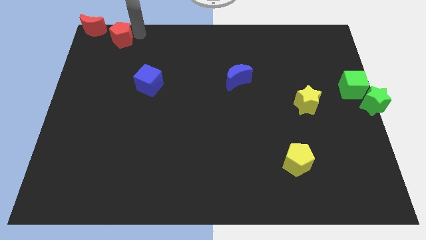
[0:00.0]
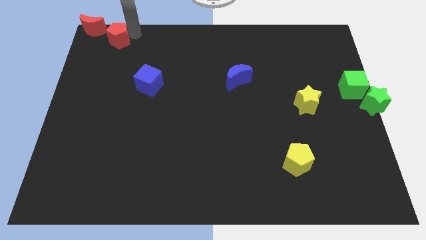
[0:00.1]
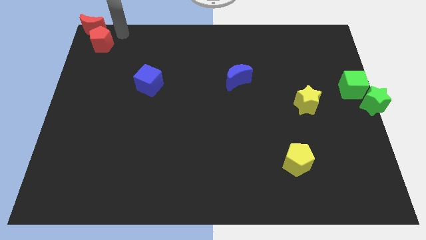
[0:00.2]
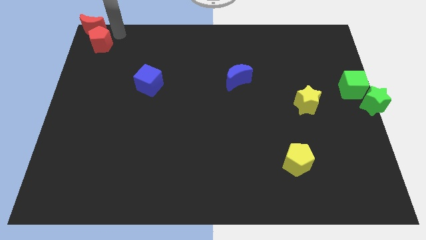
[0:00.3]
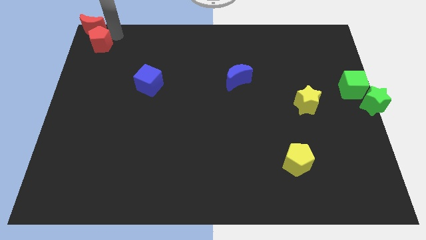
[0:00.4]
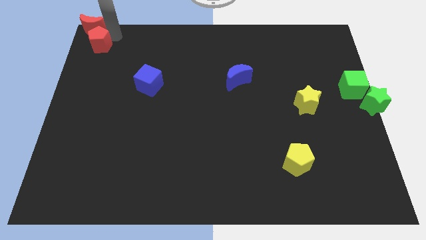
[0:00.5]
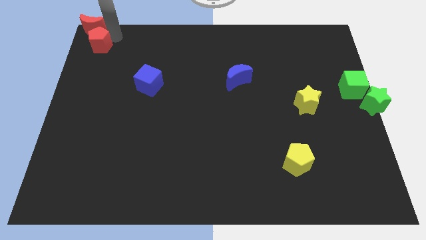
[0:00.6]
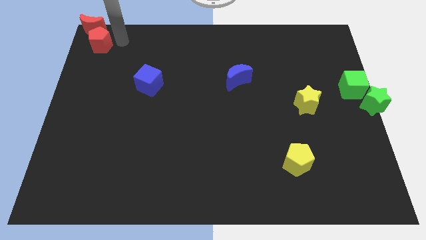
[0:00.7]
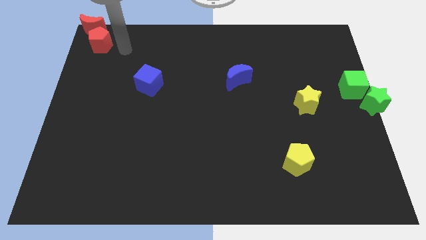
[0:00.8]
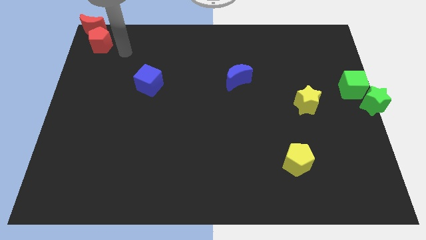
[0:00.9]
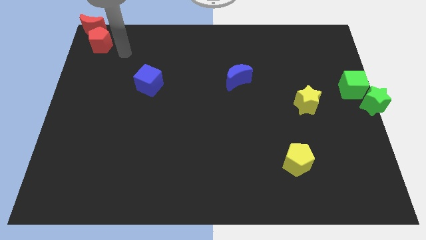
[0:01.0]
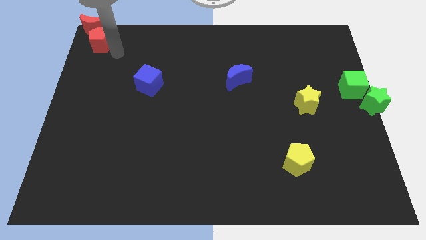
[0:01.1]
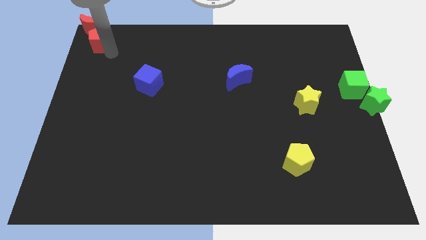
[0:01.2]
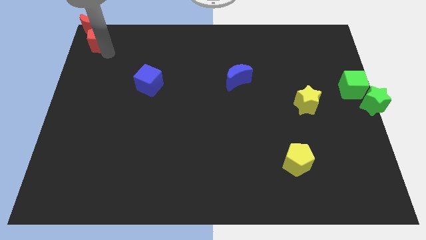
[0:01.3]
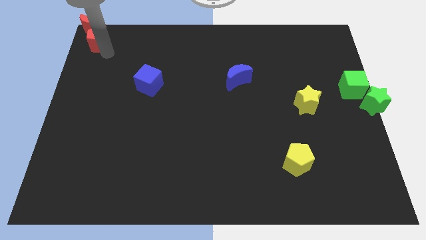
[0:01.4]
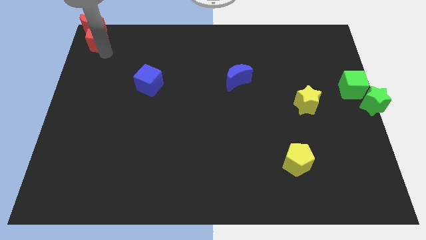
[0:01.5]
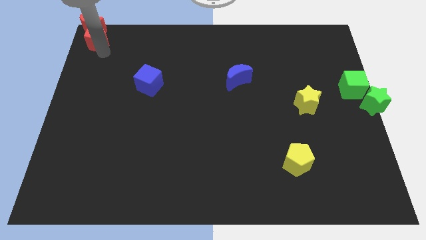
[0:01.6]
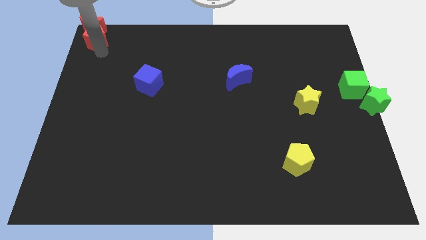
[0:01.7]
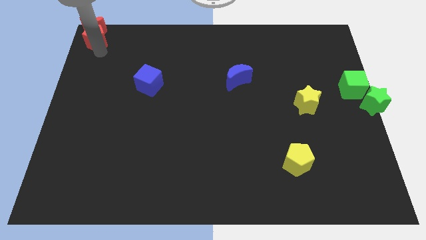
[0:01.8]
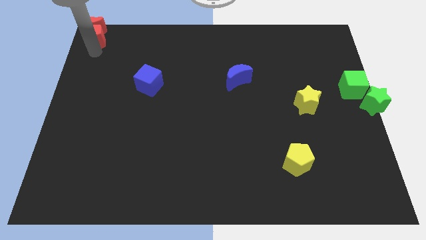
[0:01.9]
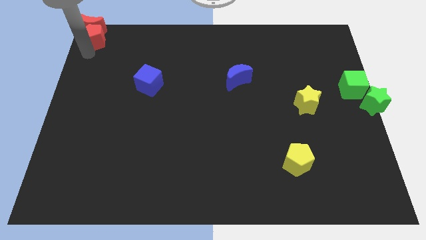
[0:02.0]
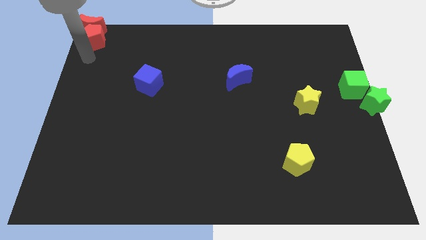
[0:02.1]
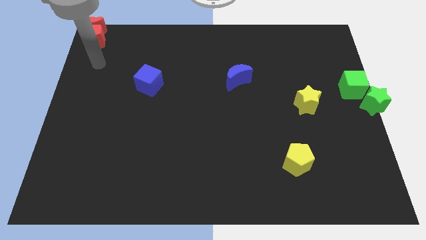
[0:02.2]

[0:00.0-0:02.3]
push the red pentagon to the top left corner of the board

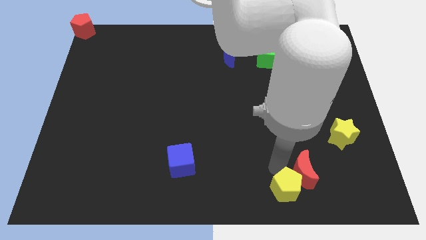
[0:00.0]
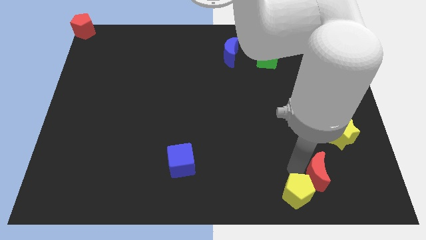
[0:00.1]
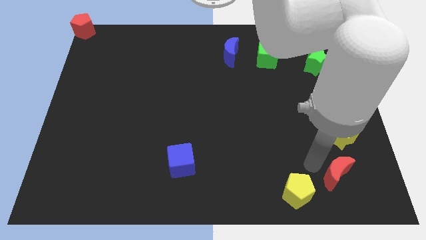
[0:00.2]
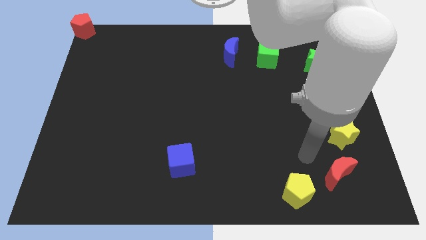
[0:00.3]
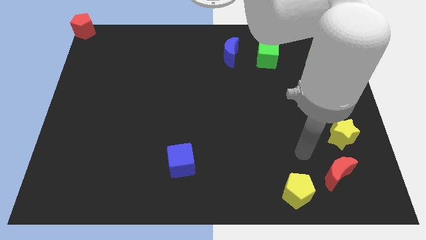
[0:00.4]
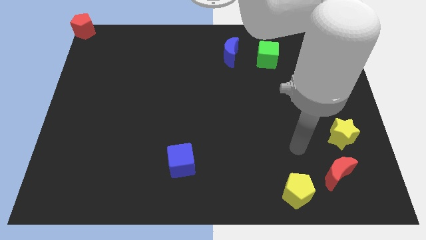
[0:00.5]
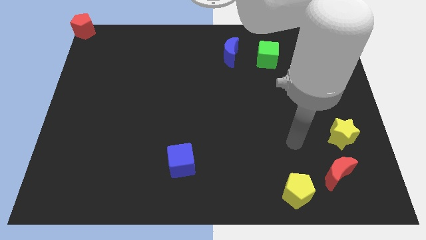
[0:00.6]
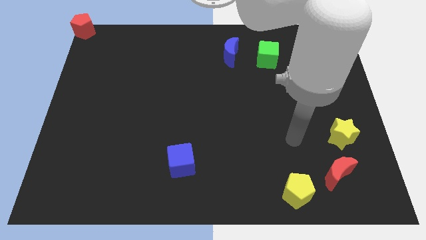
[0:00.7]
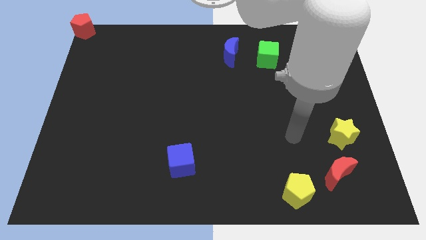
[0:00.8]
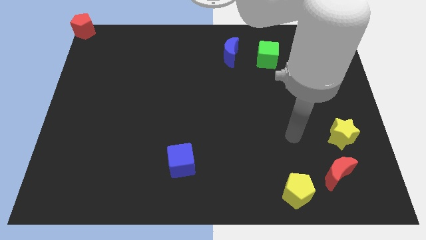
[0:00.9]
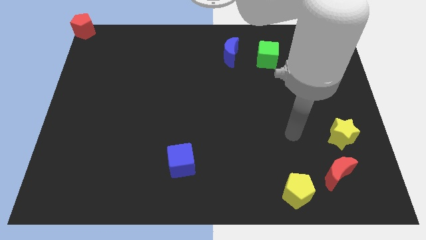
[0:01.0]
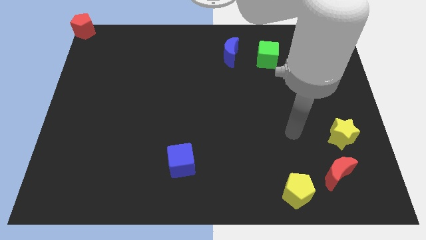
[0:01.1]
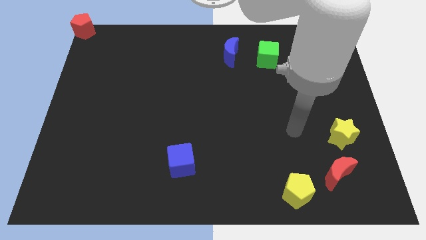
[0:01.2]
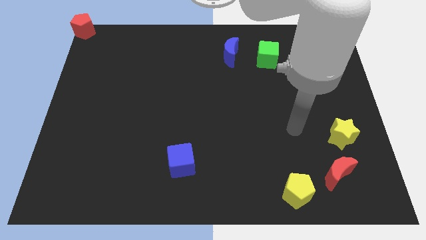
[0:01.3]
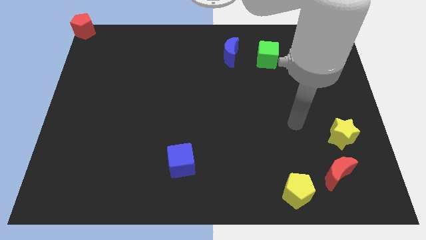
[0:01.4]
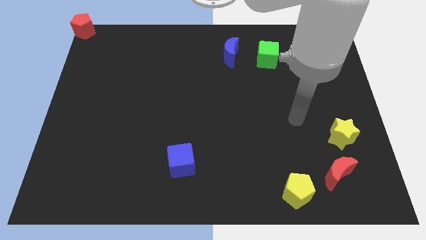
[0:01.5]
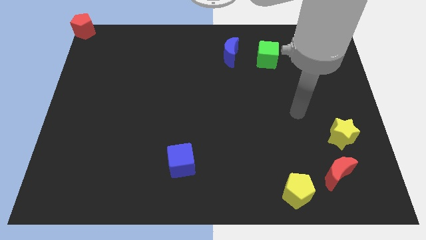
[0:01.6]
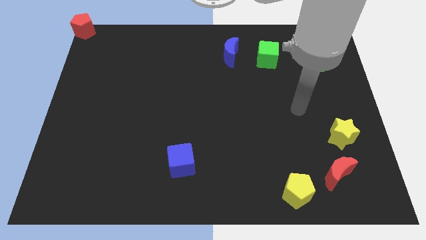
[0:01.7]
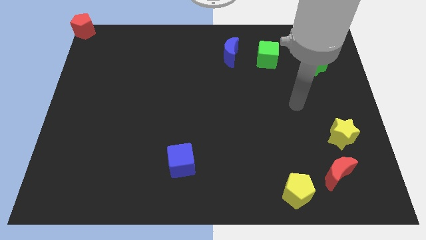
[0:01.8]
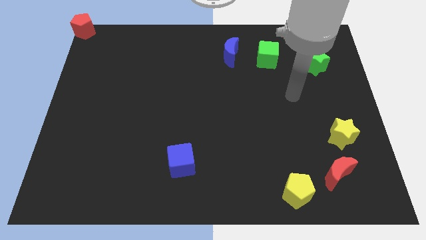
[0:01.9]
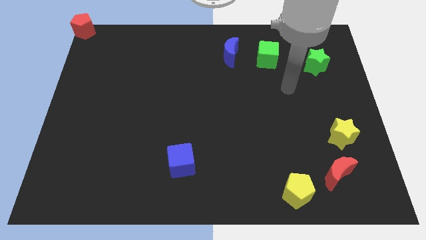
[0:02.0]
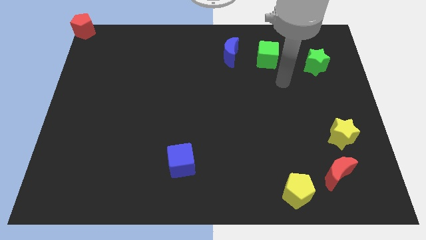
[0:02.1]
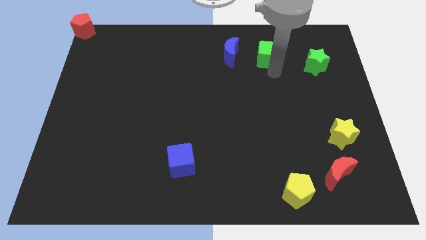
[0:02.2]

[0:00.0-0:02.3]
separate the red crescent from the yellow pentagon

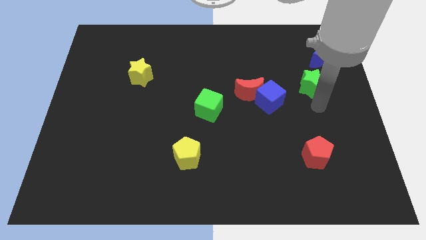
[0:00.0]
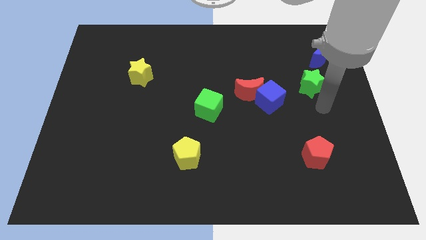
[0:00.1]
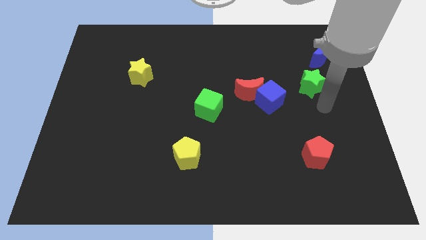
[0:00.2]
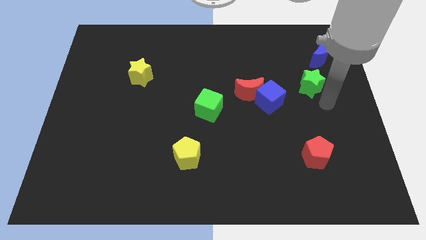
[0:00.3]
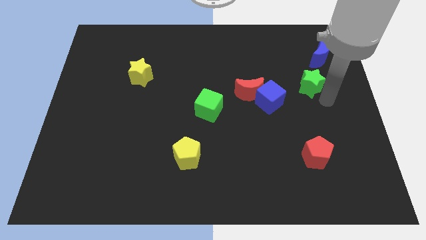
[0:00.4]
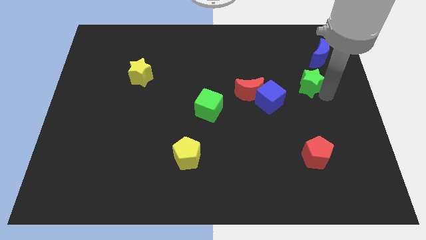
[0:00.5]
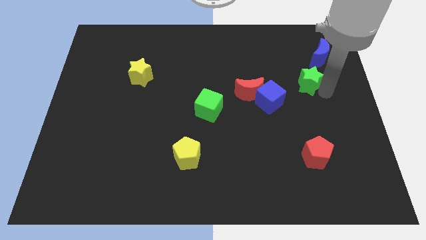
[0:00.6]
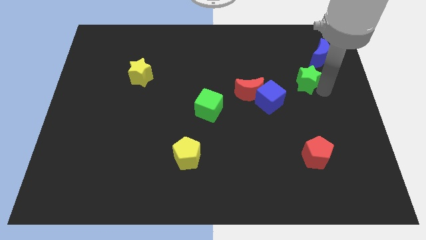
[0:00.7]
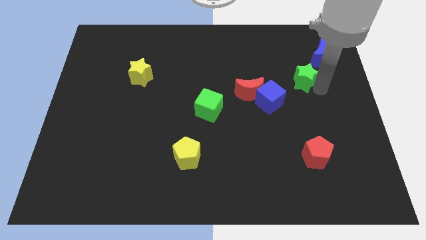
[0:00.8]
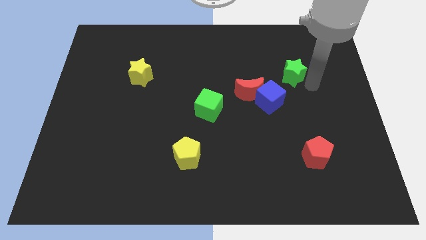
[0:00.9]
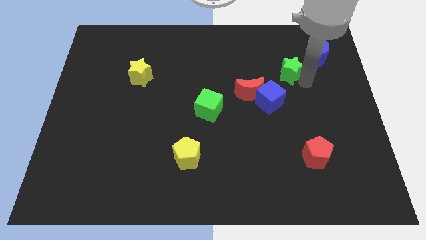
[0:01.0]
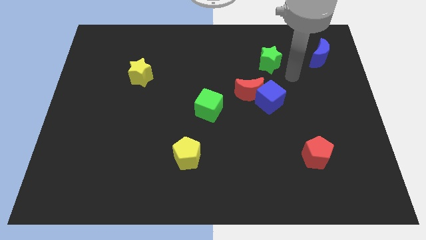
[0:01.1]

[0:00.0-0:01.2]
move green star above blue cube

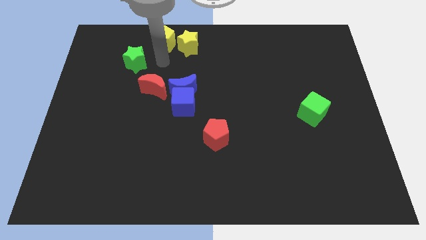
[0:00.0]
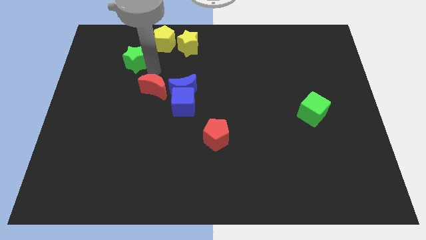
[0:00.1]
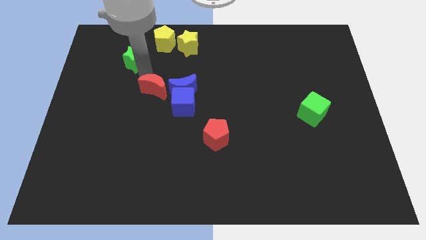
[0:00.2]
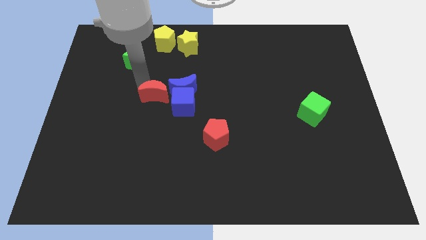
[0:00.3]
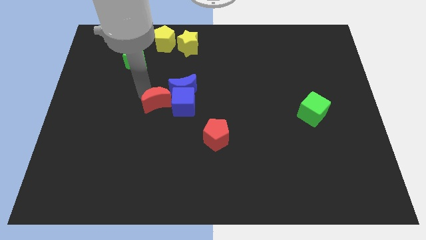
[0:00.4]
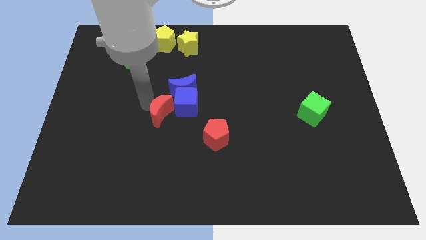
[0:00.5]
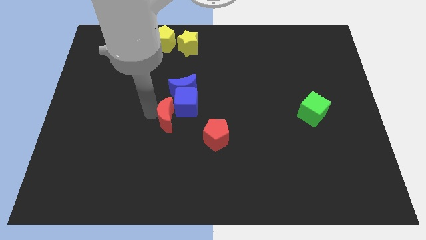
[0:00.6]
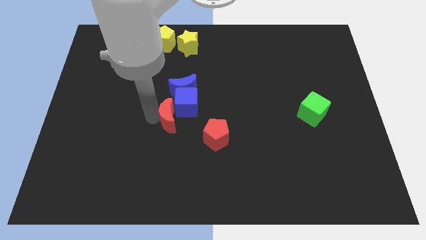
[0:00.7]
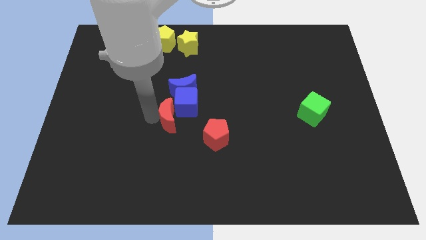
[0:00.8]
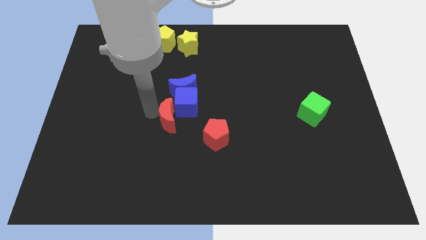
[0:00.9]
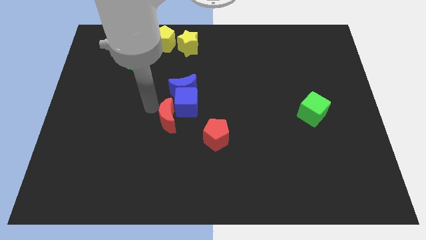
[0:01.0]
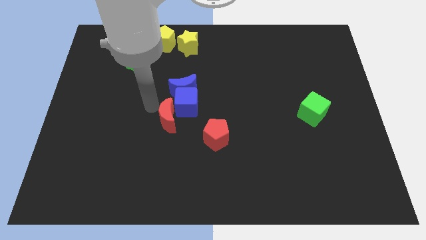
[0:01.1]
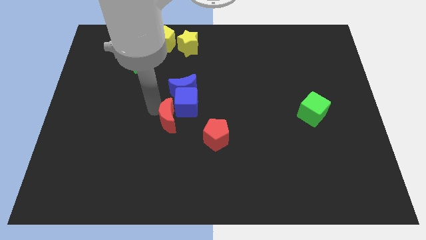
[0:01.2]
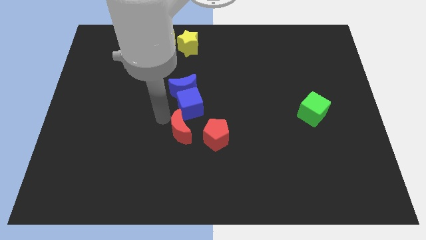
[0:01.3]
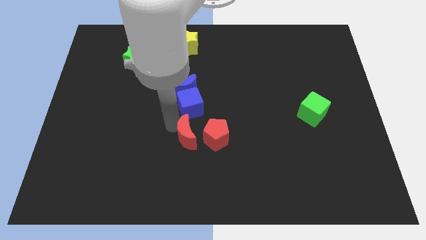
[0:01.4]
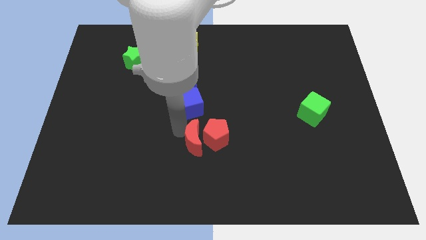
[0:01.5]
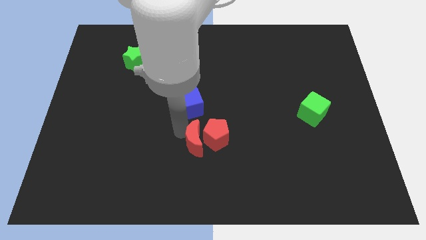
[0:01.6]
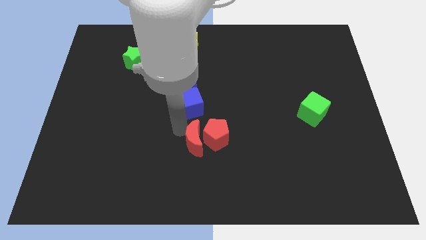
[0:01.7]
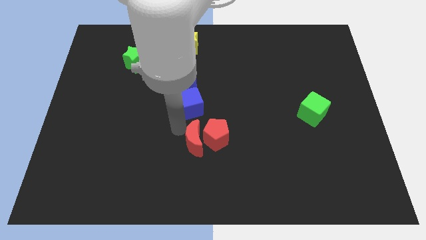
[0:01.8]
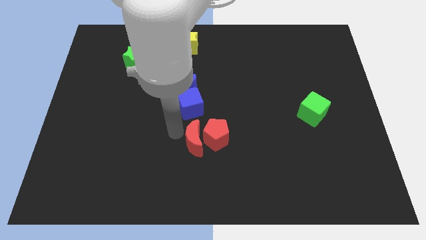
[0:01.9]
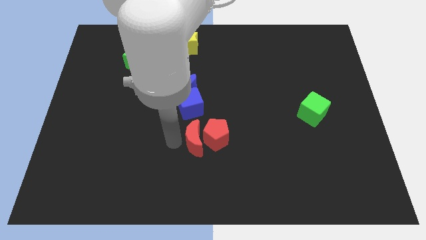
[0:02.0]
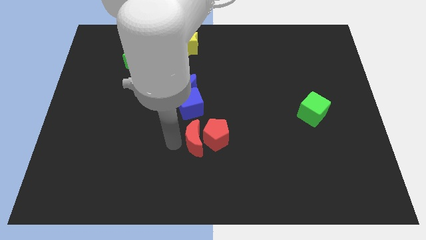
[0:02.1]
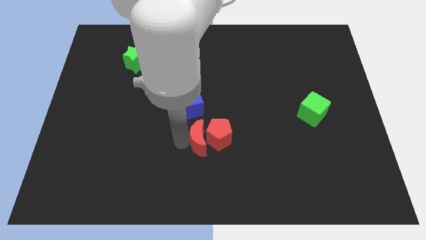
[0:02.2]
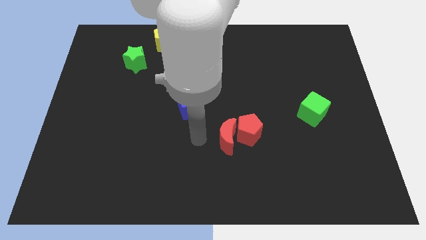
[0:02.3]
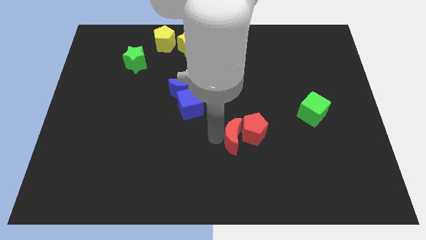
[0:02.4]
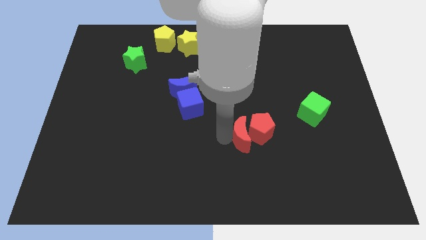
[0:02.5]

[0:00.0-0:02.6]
move red blocks to the center of the board

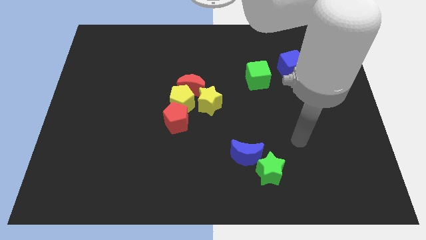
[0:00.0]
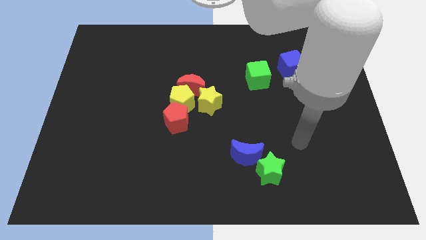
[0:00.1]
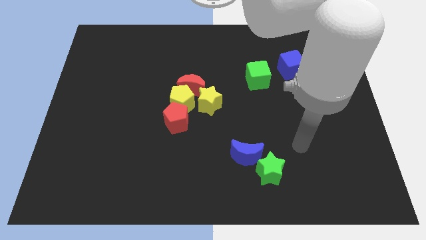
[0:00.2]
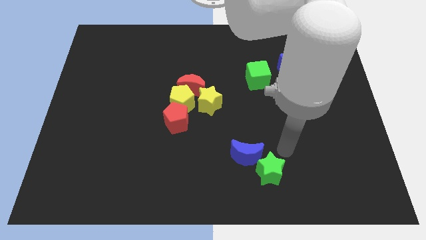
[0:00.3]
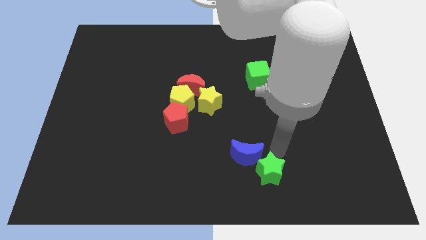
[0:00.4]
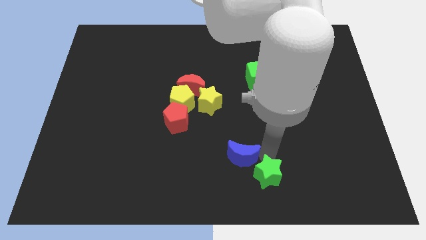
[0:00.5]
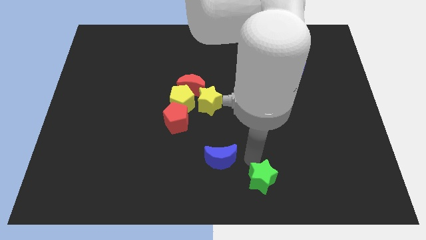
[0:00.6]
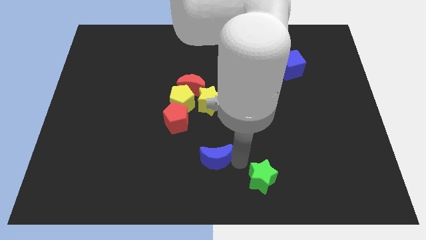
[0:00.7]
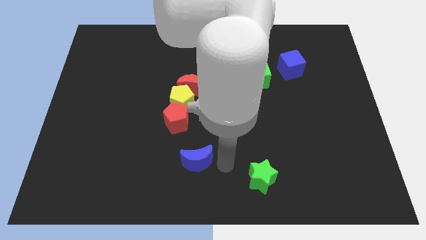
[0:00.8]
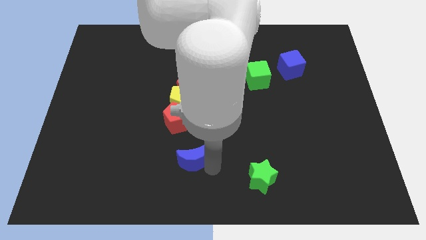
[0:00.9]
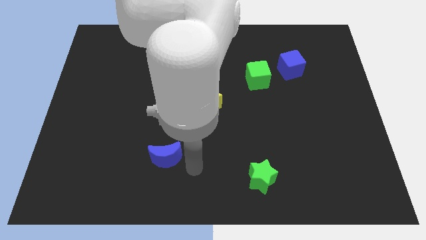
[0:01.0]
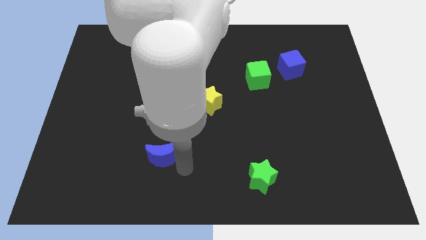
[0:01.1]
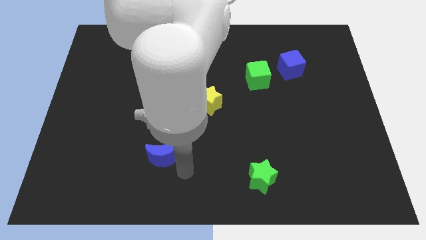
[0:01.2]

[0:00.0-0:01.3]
push the blue crescent towards the diagonal right corner of the red pentagon
